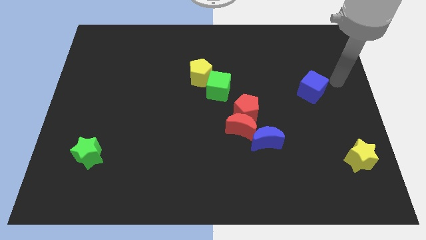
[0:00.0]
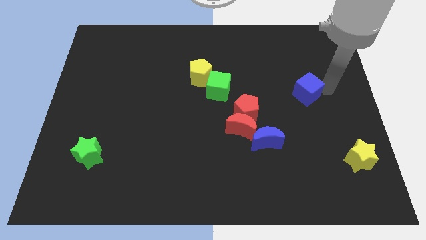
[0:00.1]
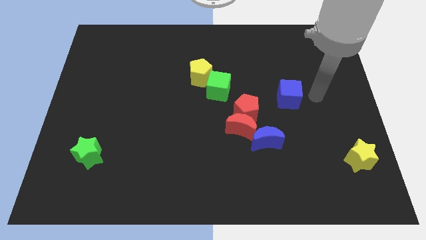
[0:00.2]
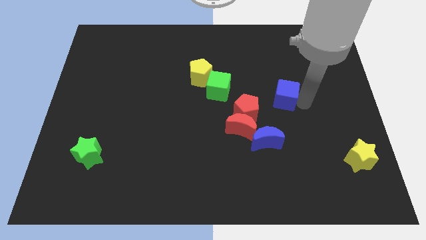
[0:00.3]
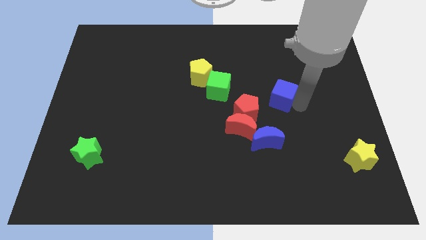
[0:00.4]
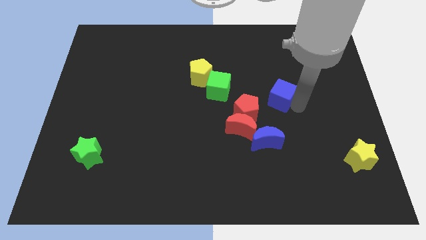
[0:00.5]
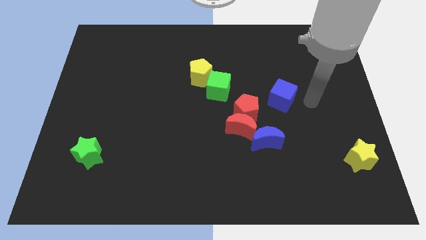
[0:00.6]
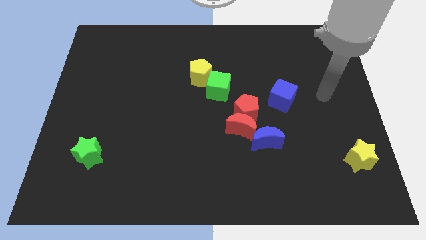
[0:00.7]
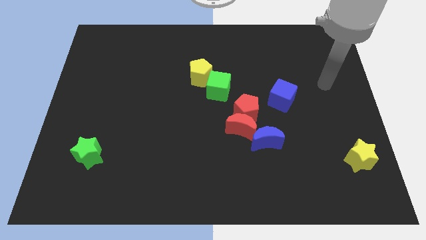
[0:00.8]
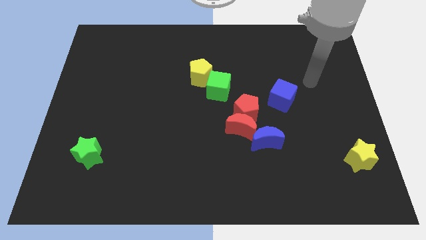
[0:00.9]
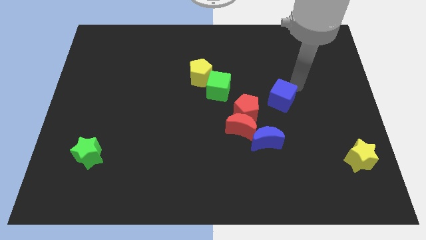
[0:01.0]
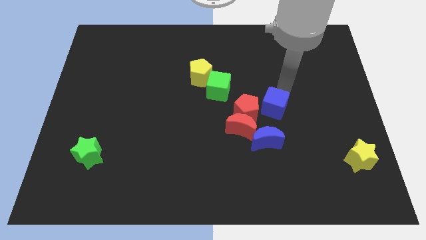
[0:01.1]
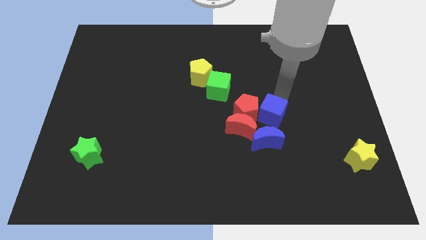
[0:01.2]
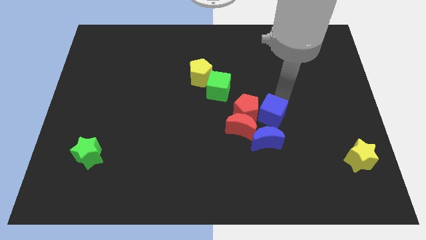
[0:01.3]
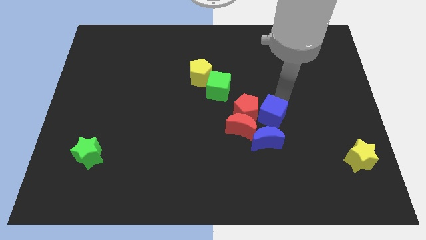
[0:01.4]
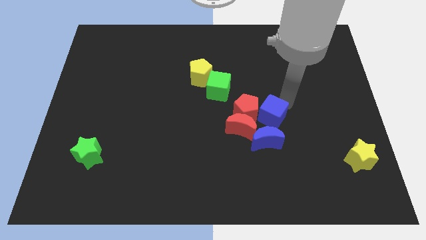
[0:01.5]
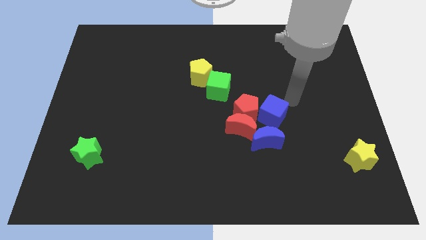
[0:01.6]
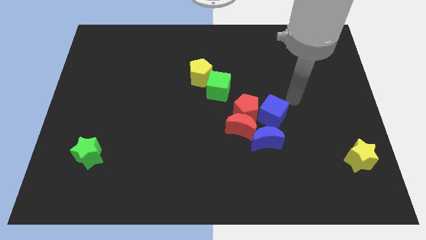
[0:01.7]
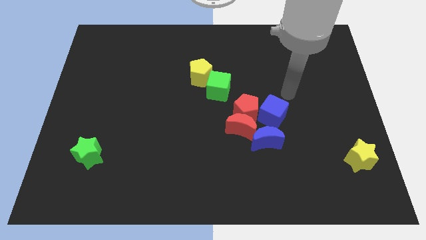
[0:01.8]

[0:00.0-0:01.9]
place the blue cube at the right side of the red pentagon

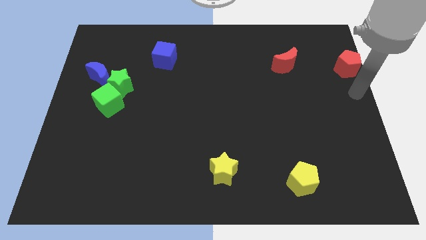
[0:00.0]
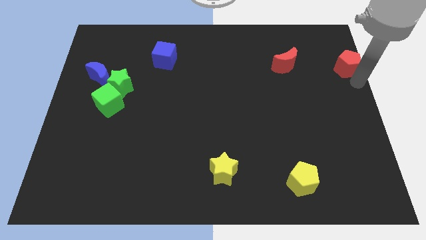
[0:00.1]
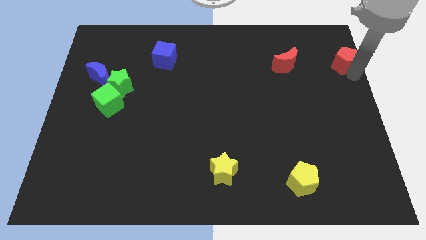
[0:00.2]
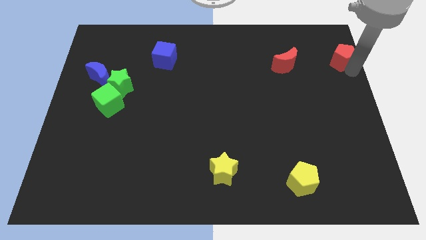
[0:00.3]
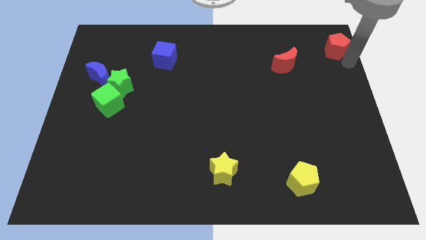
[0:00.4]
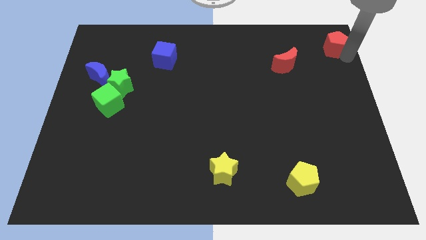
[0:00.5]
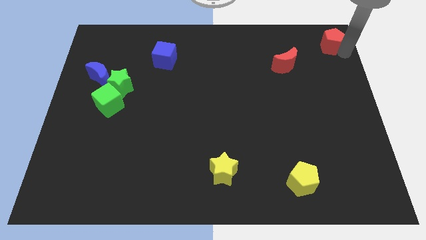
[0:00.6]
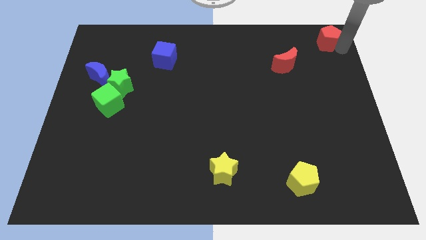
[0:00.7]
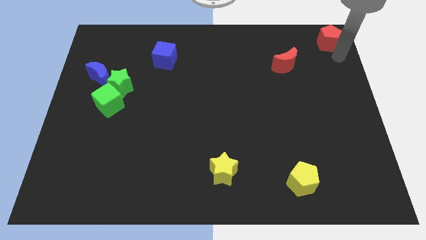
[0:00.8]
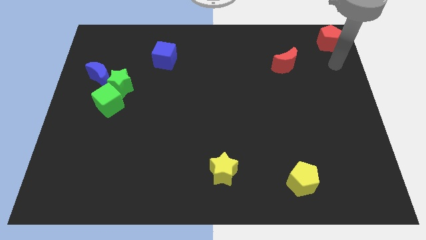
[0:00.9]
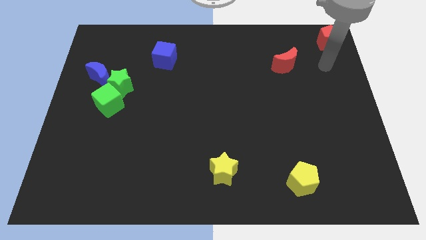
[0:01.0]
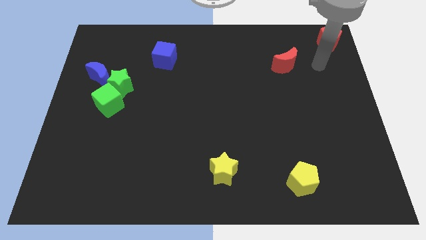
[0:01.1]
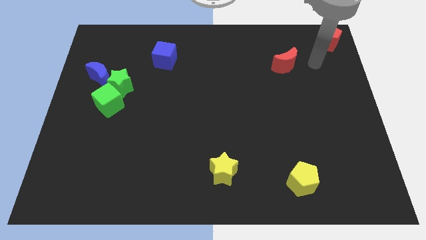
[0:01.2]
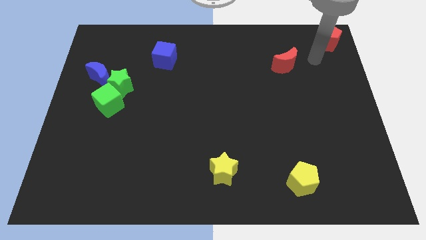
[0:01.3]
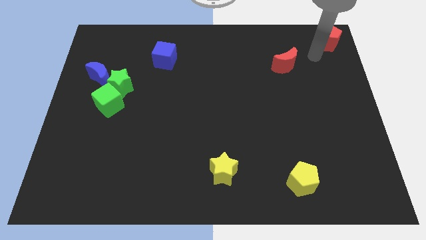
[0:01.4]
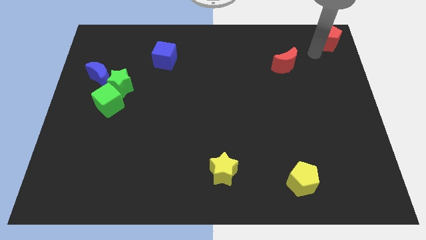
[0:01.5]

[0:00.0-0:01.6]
move the red pentagon to the top right corner of the board

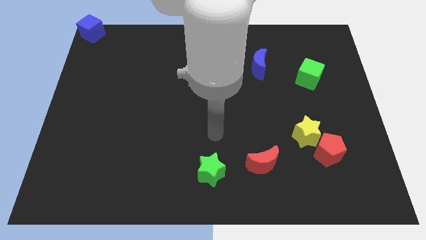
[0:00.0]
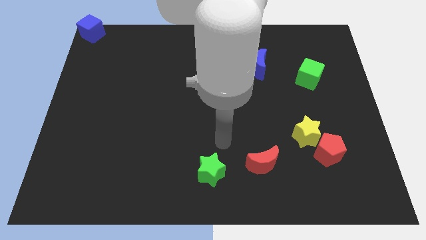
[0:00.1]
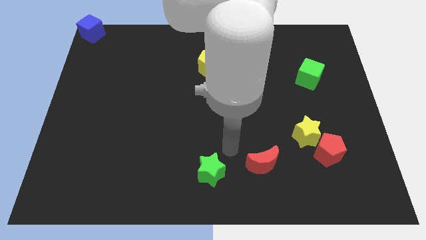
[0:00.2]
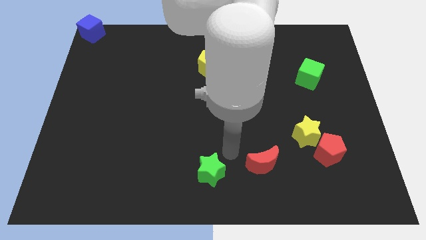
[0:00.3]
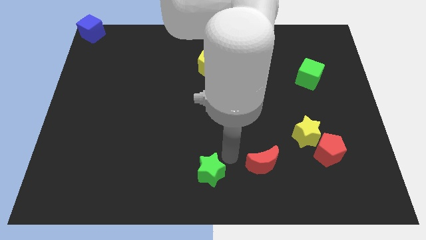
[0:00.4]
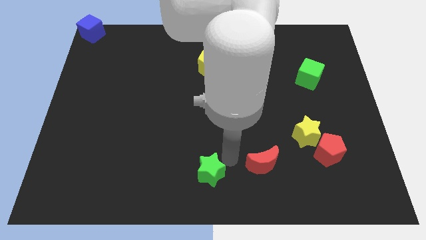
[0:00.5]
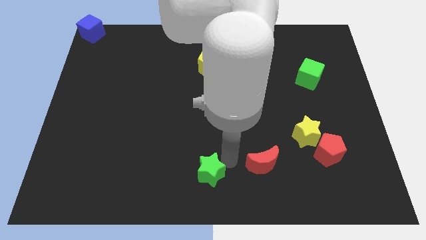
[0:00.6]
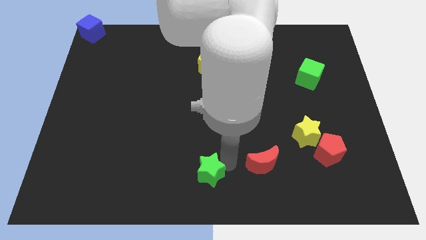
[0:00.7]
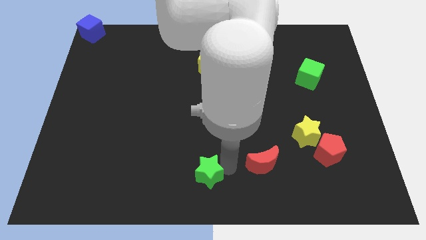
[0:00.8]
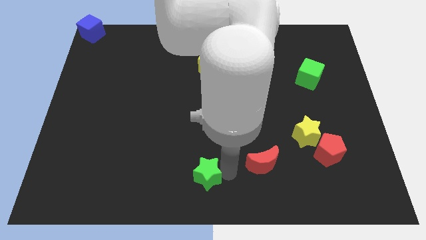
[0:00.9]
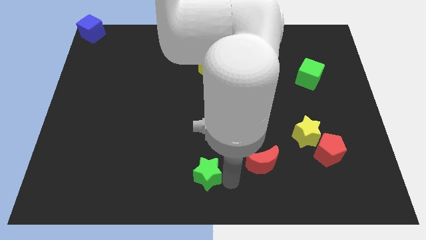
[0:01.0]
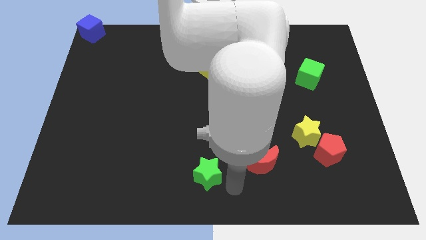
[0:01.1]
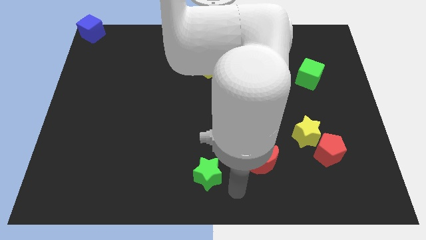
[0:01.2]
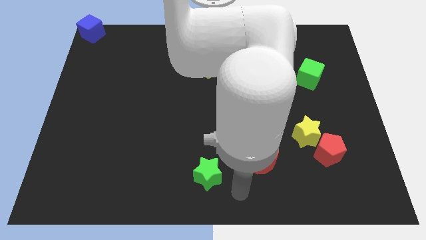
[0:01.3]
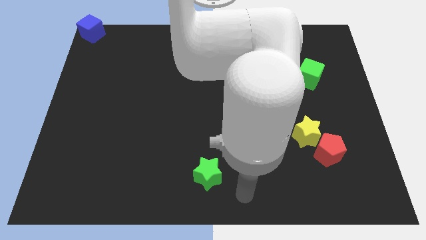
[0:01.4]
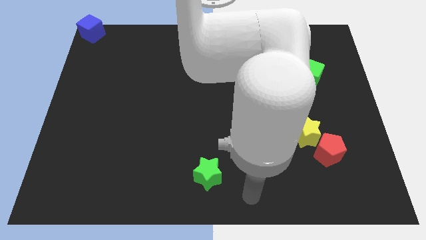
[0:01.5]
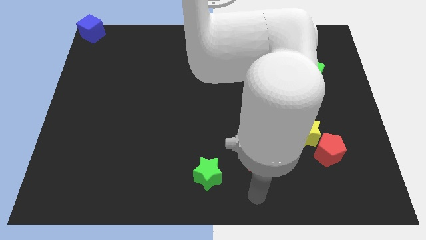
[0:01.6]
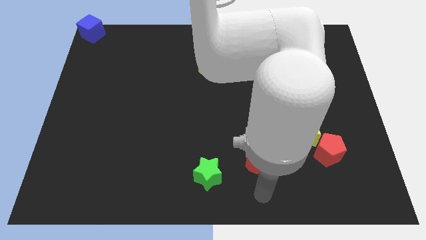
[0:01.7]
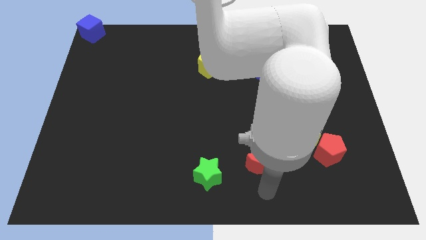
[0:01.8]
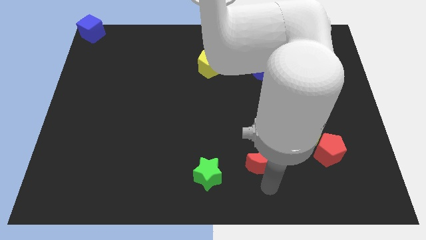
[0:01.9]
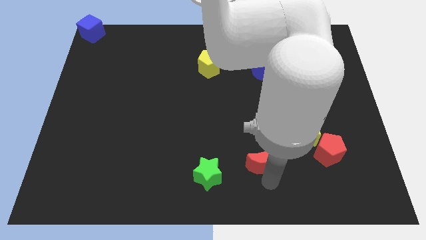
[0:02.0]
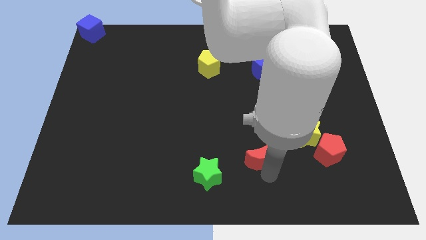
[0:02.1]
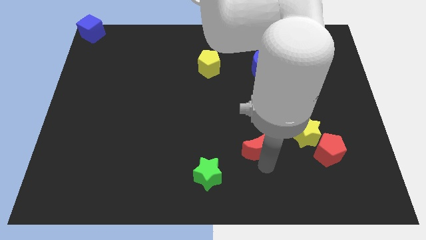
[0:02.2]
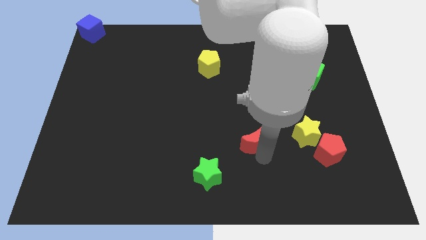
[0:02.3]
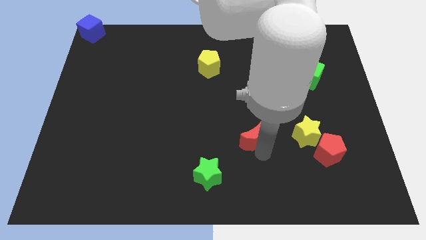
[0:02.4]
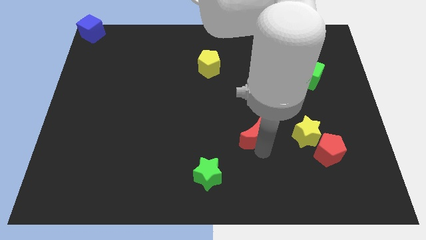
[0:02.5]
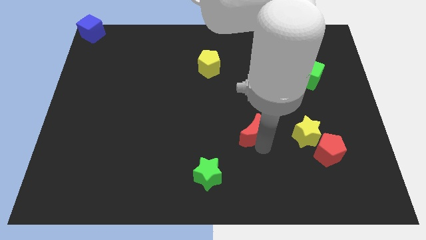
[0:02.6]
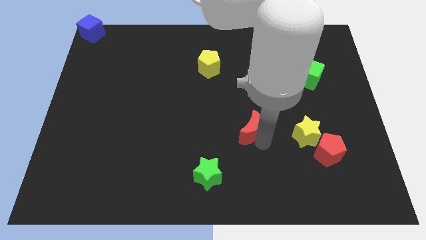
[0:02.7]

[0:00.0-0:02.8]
place the red moon diagonally to the green star

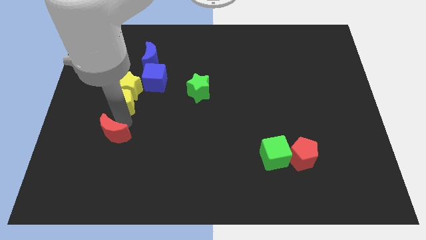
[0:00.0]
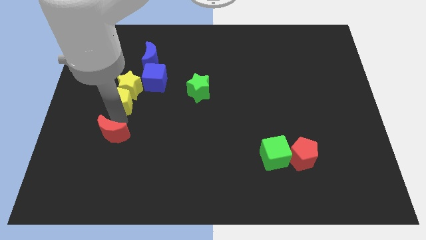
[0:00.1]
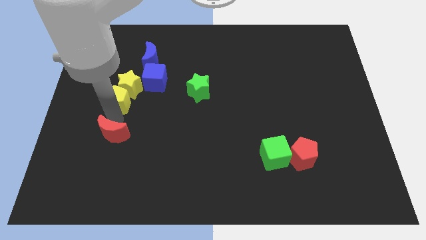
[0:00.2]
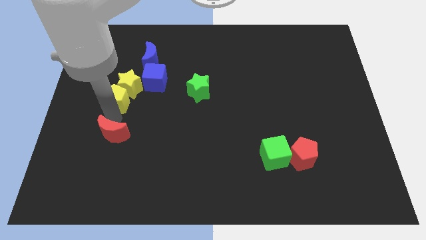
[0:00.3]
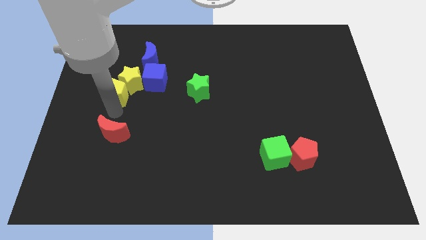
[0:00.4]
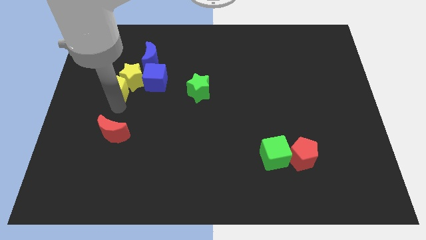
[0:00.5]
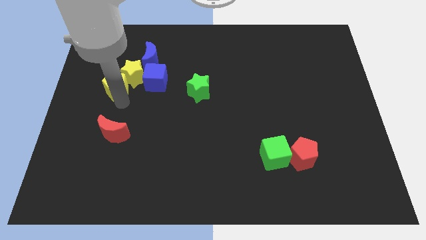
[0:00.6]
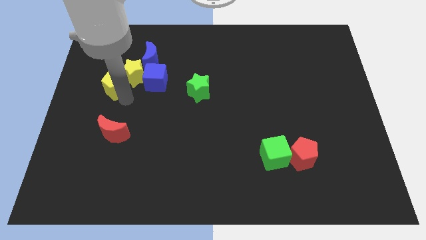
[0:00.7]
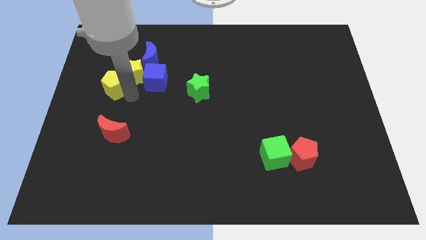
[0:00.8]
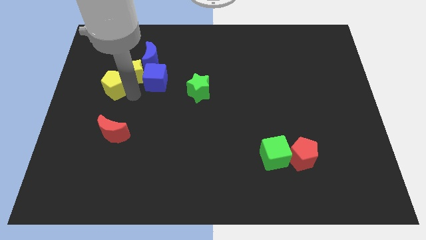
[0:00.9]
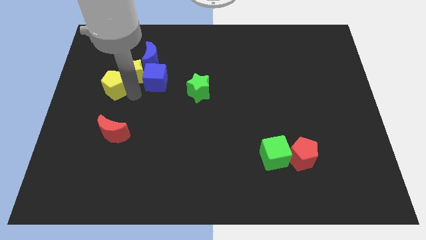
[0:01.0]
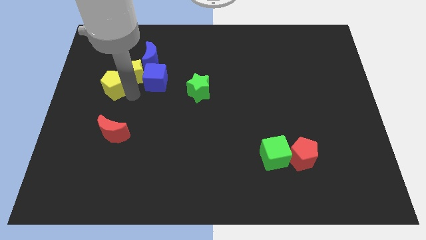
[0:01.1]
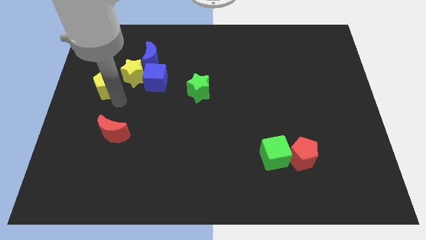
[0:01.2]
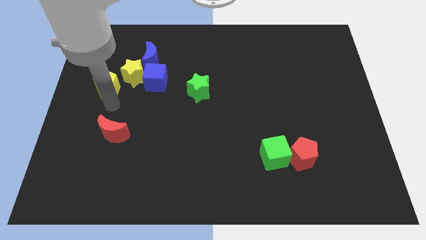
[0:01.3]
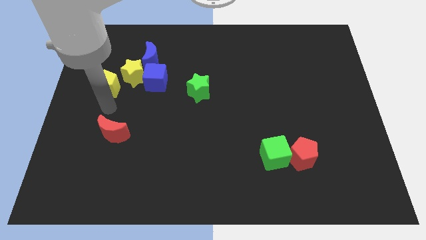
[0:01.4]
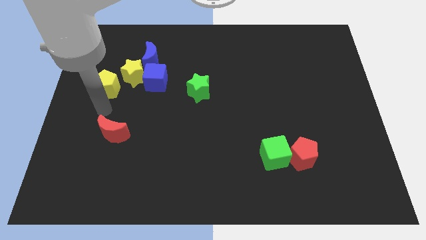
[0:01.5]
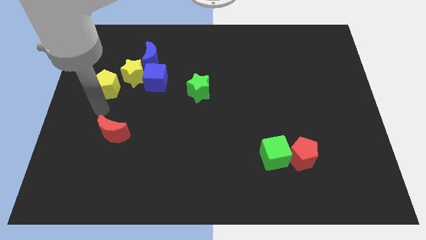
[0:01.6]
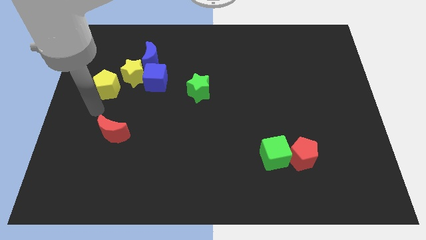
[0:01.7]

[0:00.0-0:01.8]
slide the yellow star and yellow pentagon to the bottom left side of the blue crescent

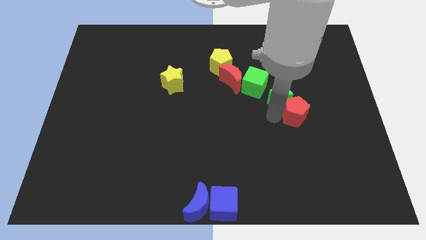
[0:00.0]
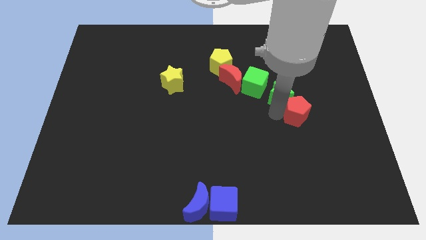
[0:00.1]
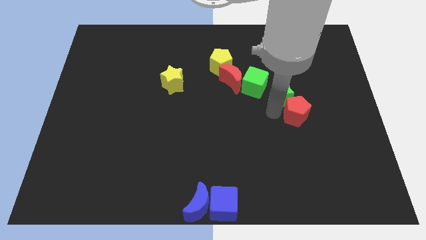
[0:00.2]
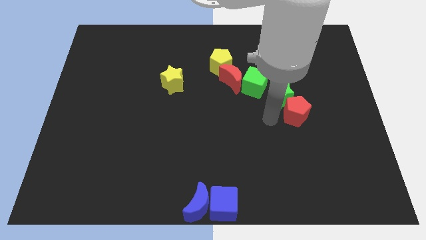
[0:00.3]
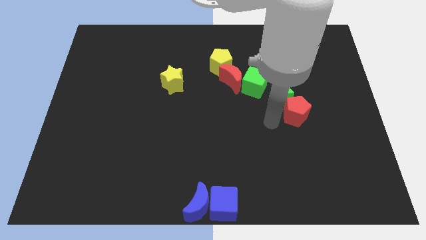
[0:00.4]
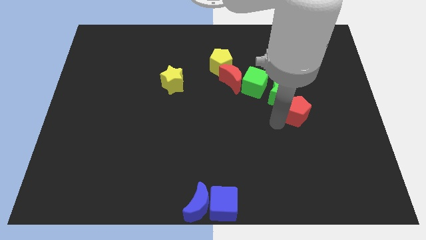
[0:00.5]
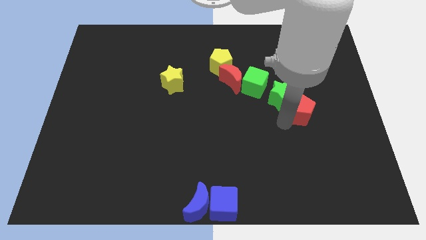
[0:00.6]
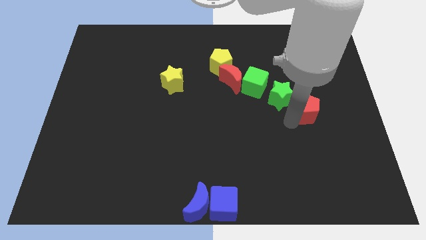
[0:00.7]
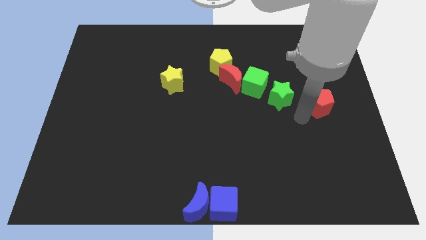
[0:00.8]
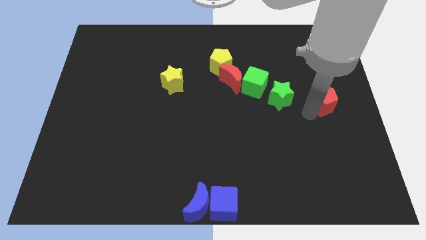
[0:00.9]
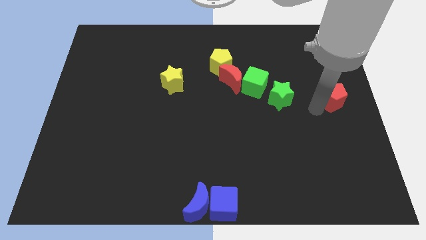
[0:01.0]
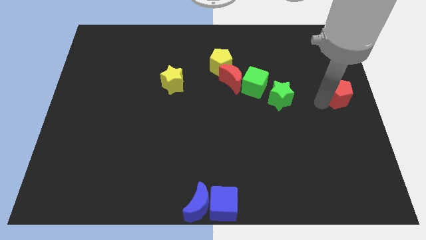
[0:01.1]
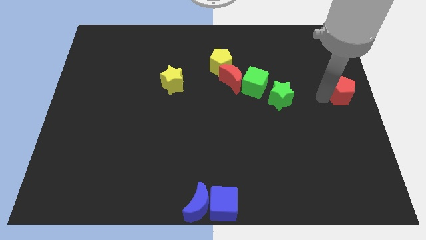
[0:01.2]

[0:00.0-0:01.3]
take the red pentagon away from the green star
